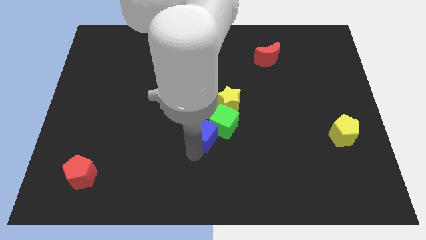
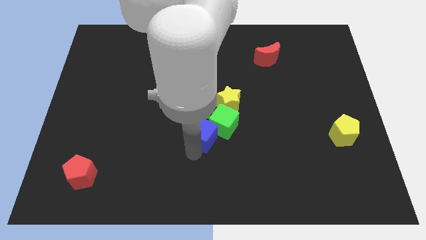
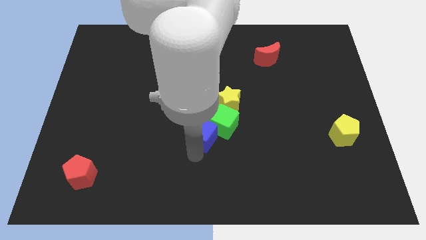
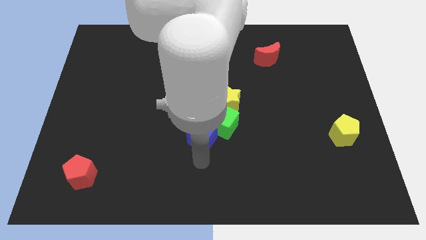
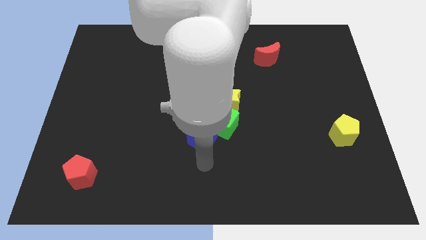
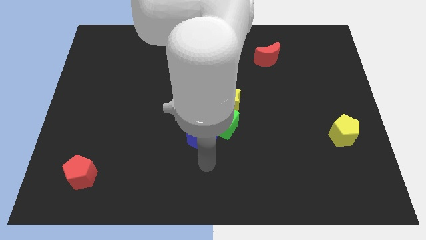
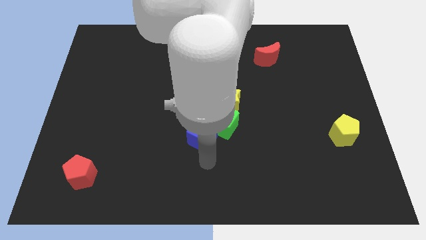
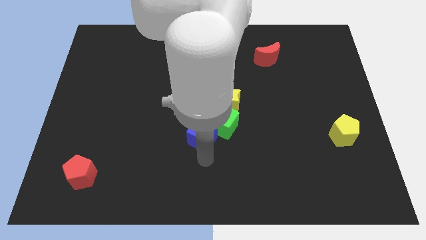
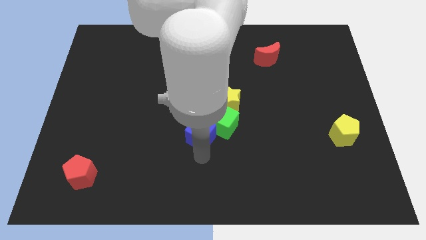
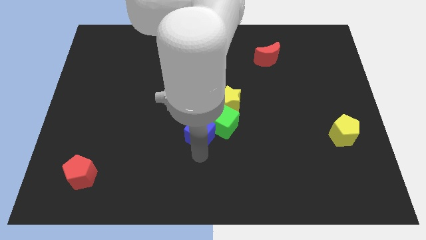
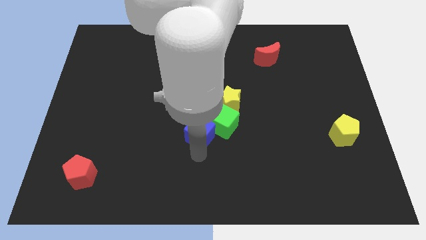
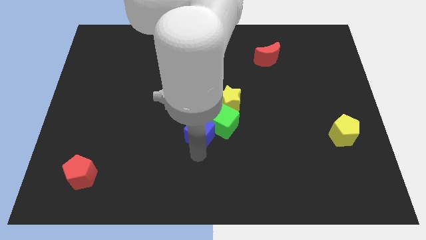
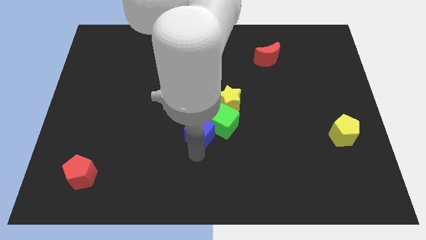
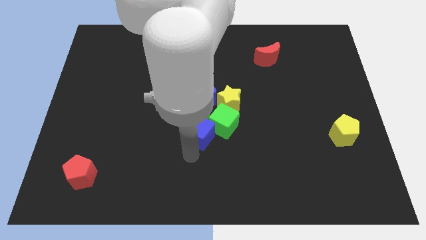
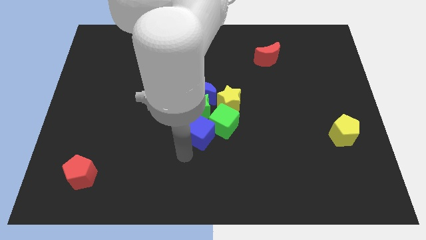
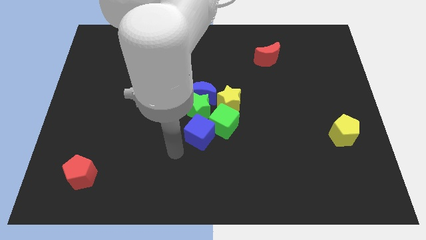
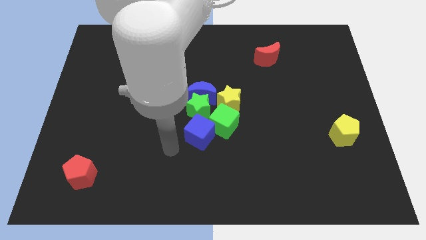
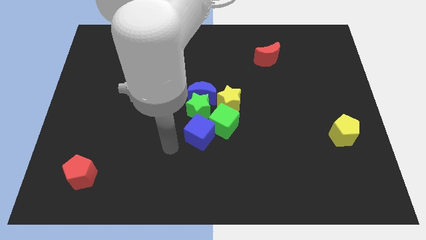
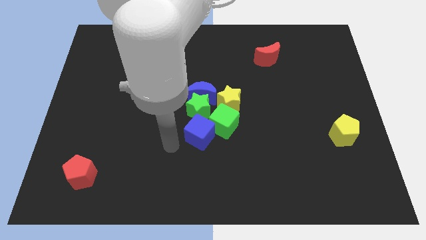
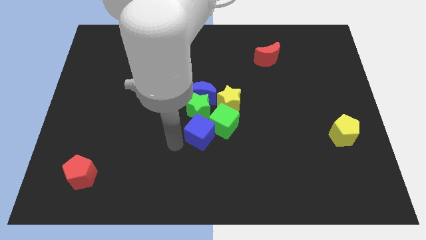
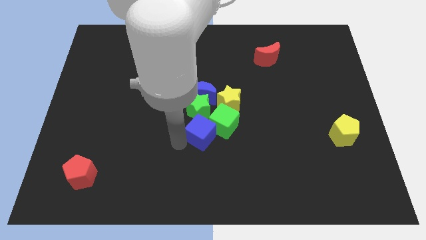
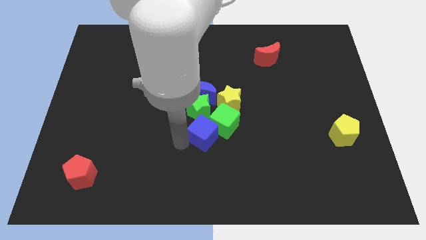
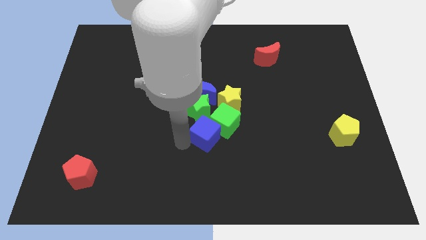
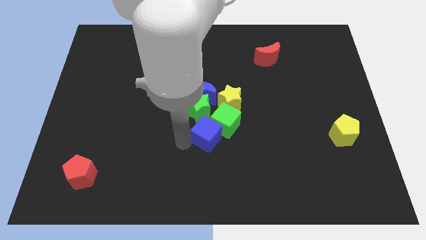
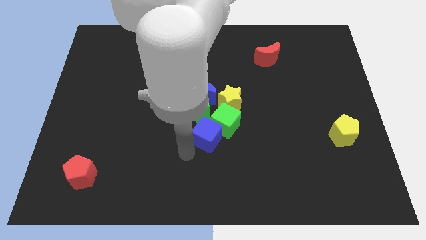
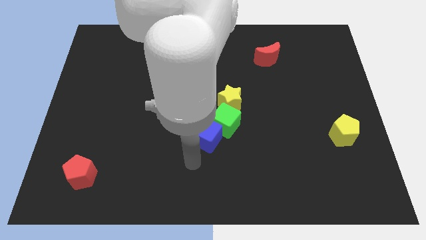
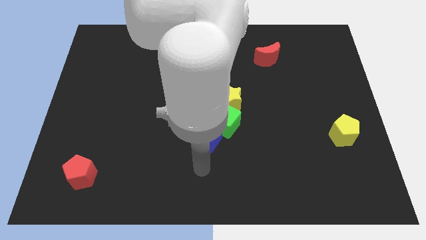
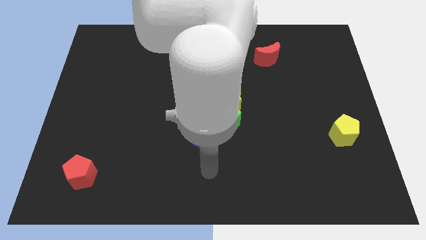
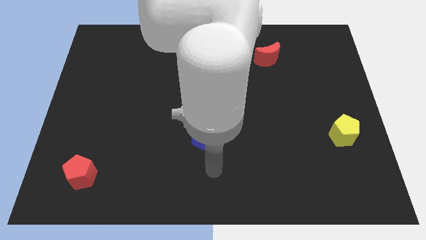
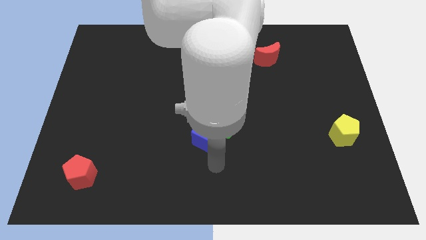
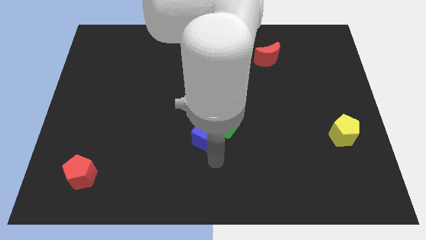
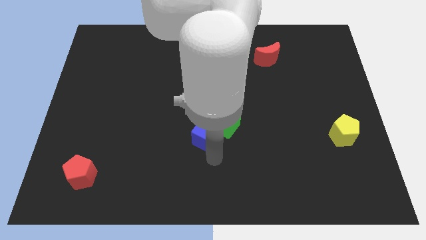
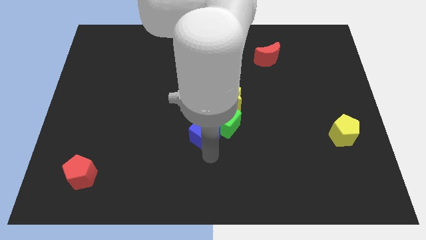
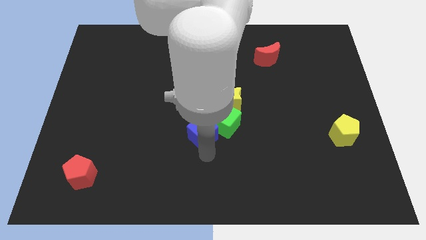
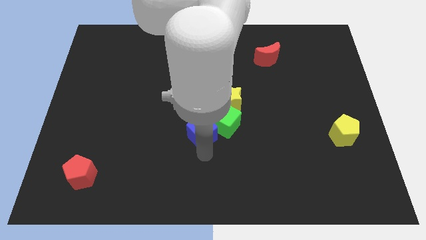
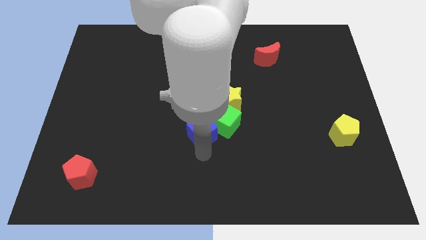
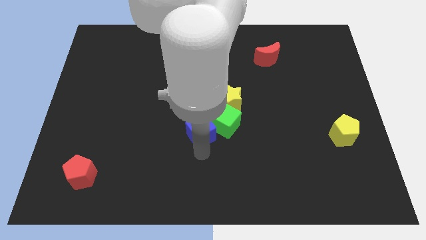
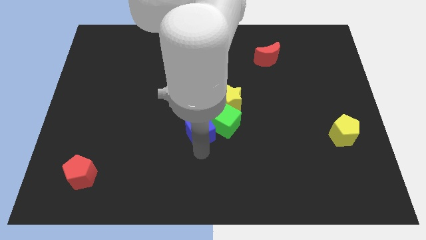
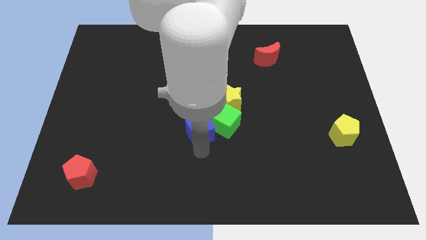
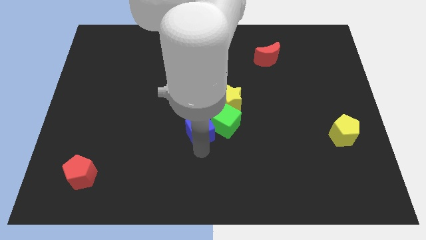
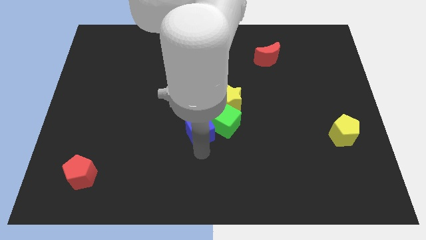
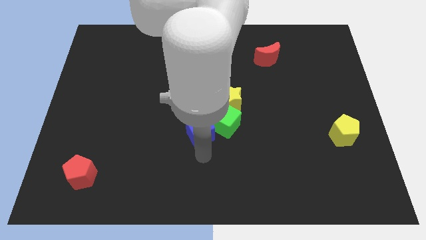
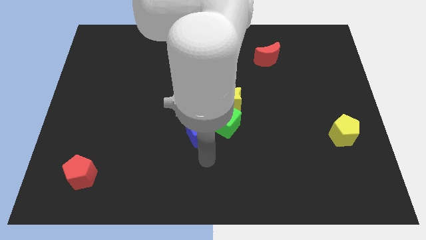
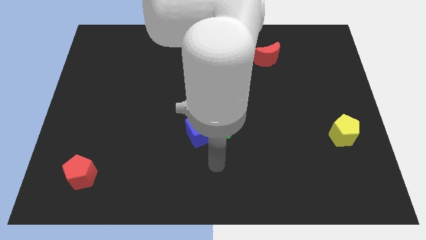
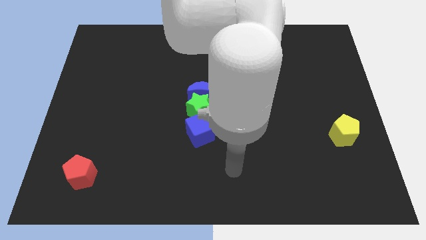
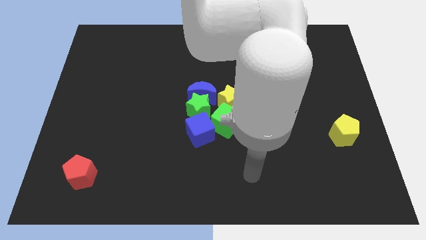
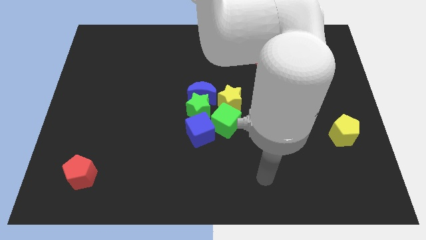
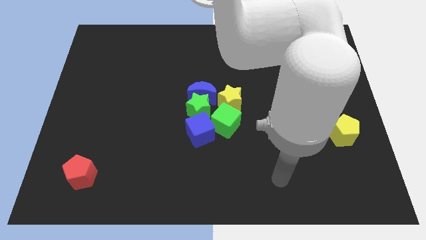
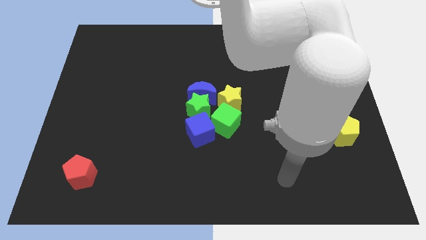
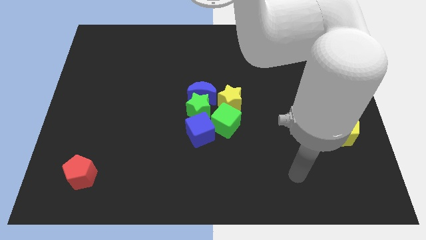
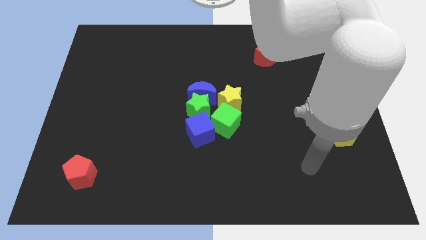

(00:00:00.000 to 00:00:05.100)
slightly move the blue block into the green star

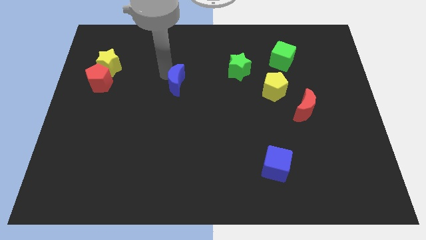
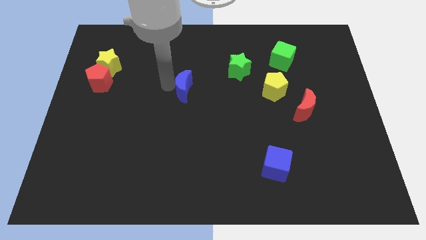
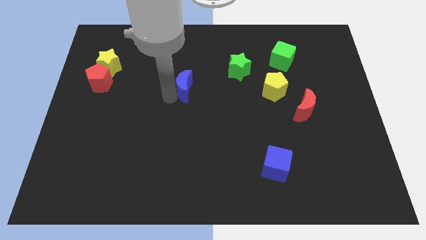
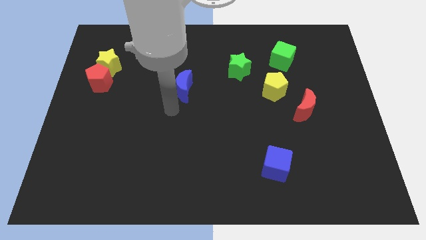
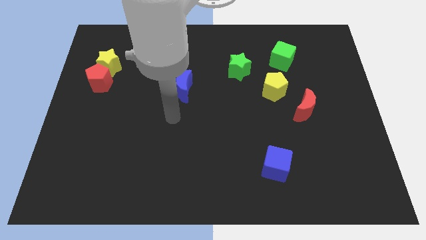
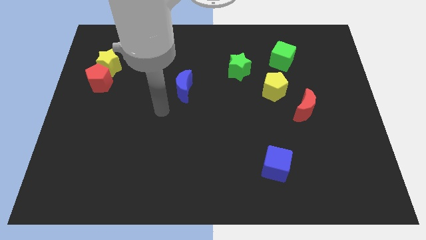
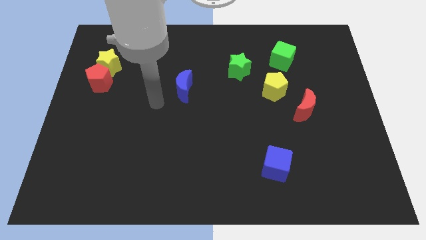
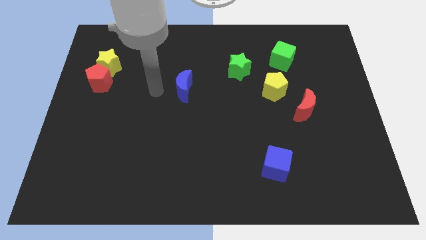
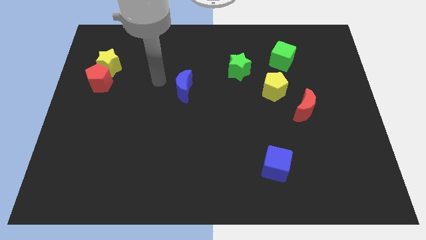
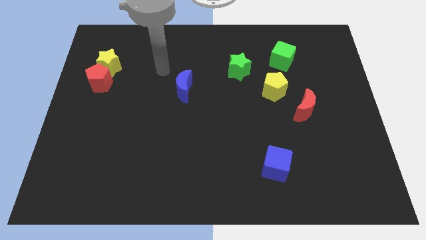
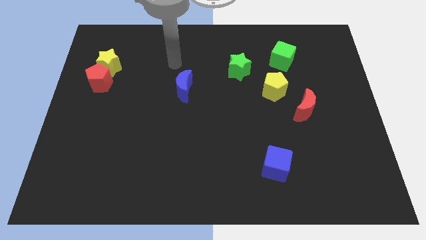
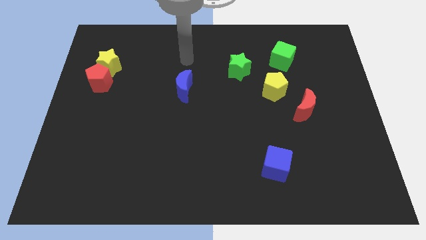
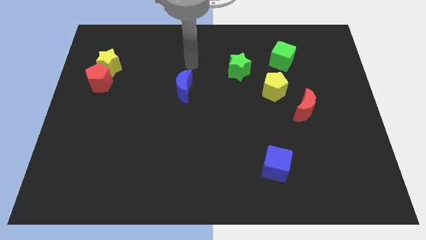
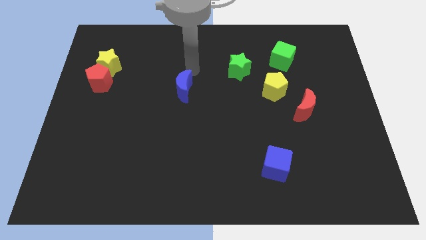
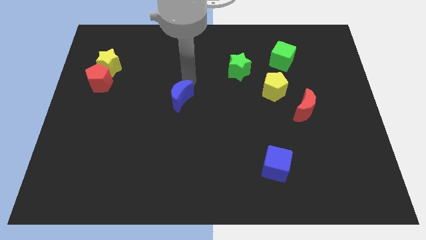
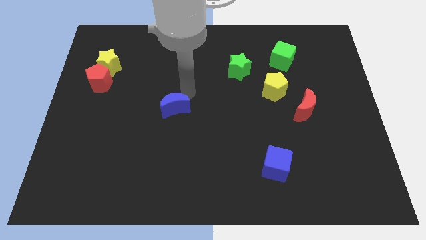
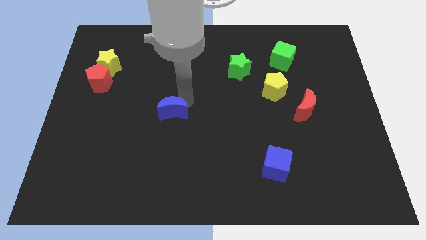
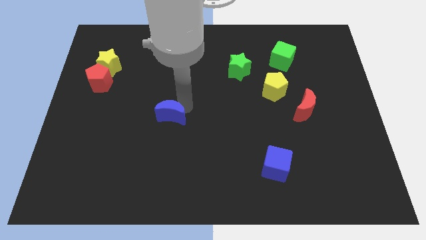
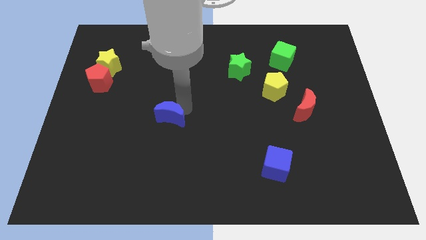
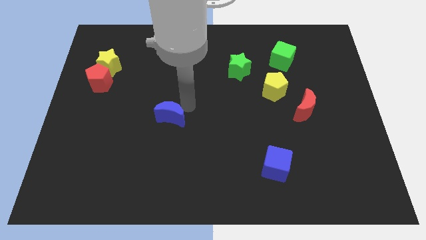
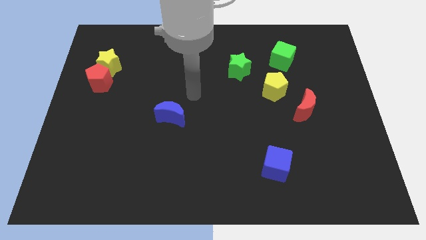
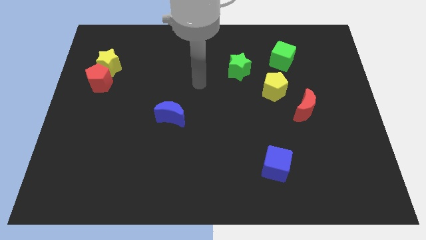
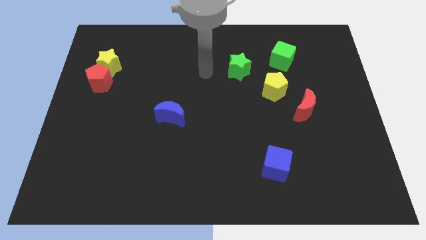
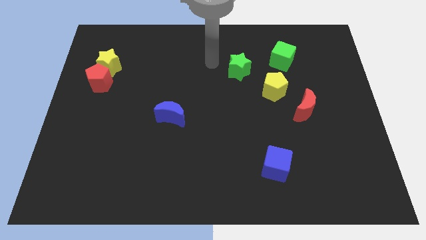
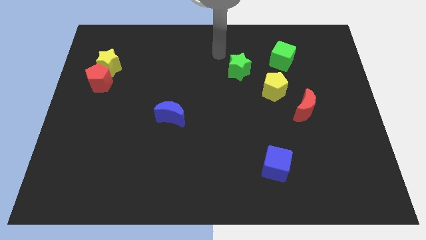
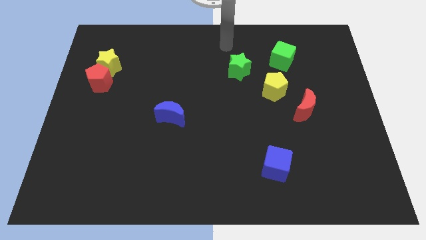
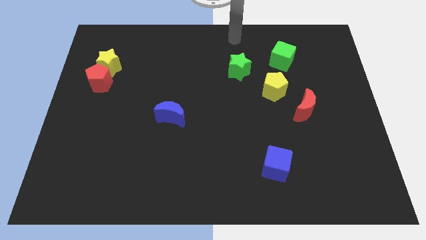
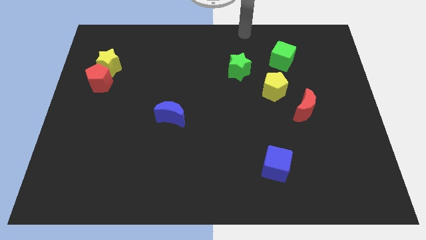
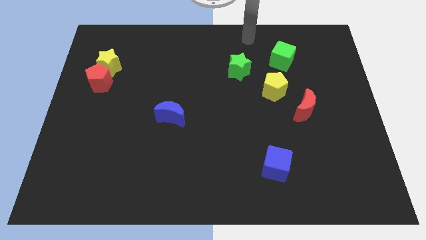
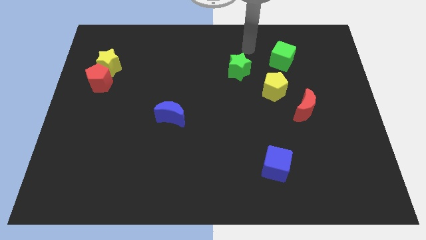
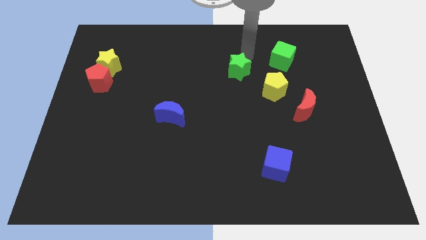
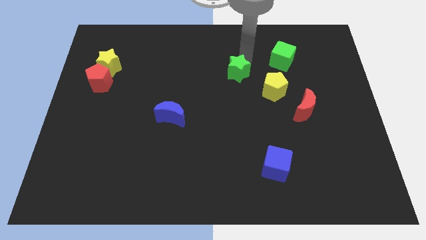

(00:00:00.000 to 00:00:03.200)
push blue moon to the bottom side of the board

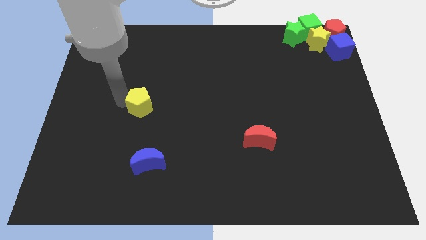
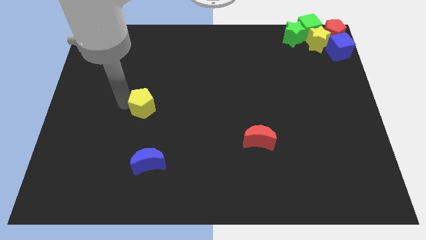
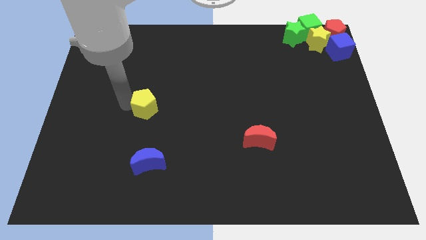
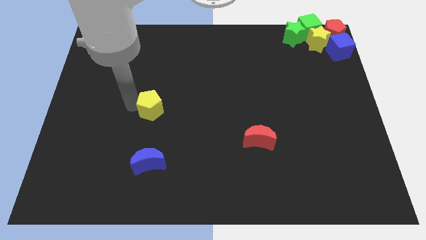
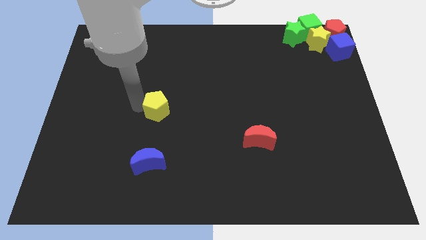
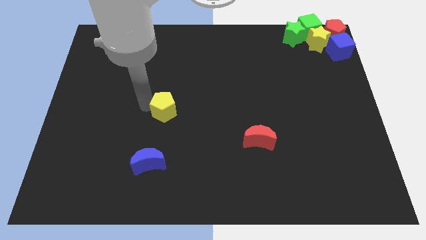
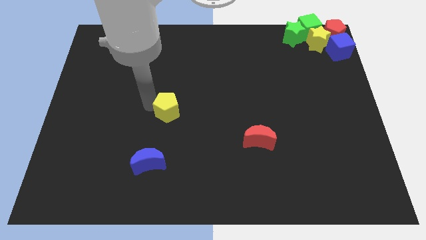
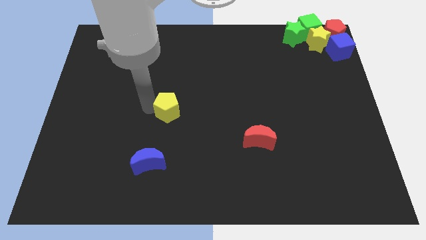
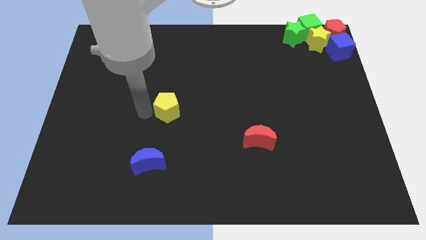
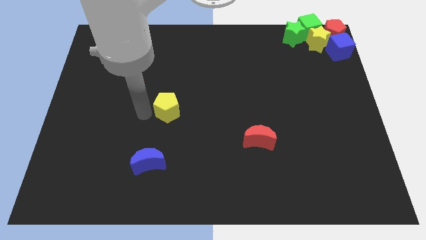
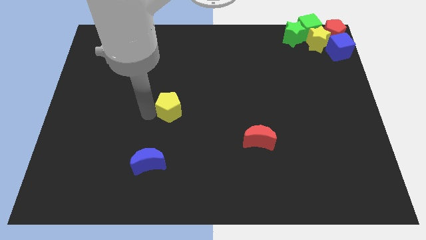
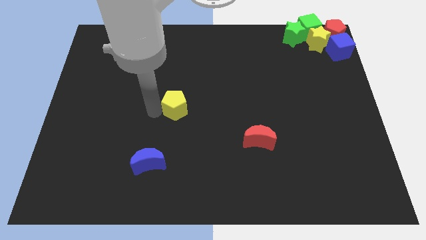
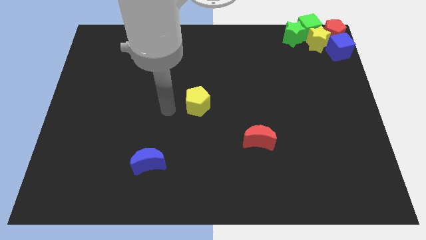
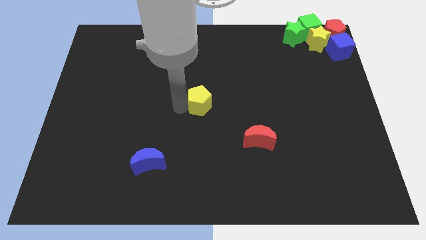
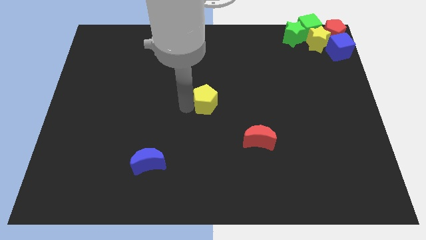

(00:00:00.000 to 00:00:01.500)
move the yellow pentagon towards right a bit
